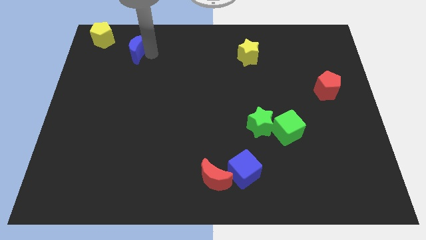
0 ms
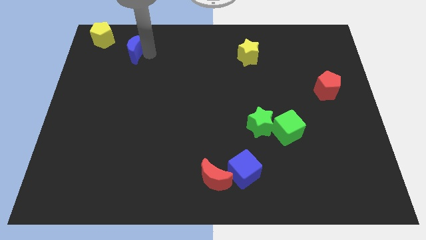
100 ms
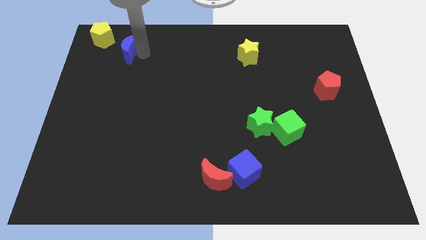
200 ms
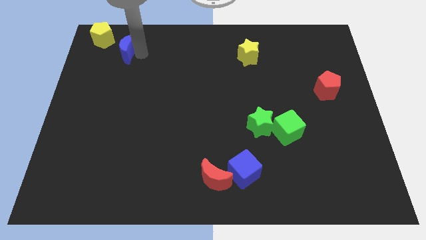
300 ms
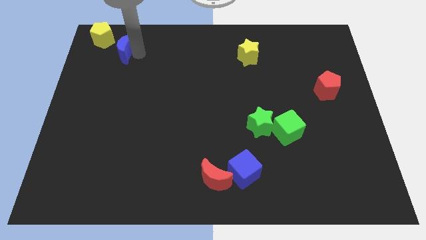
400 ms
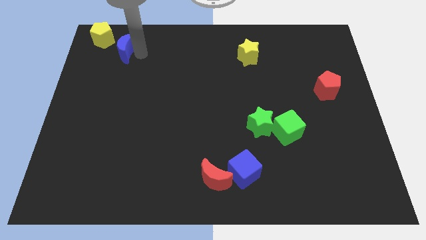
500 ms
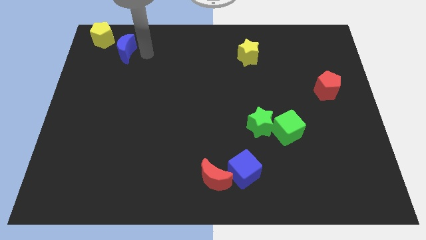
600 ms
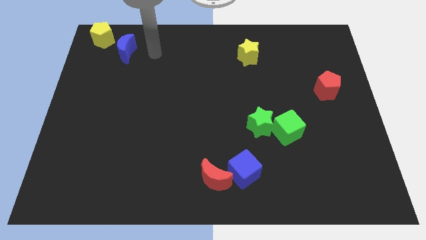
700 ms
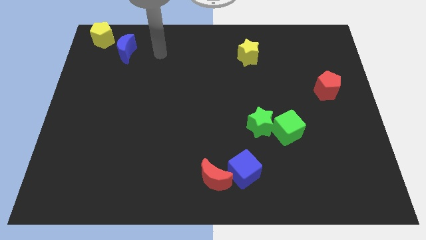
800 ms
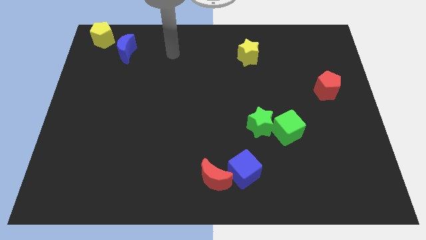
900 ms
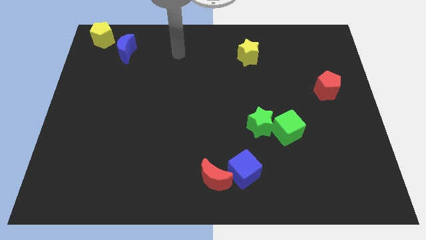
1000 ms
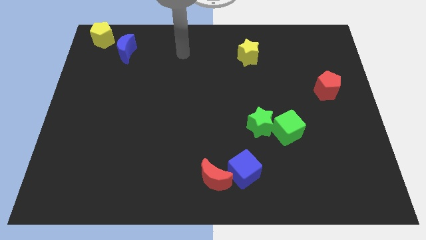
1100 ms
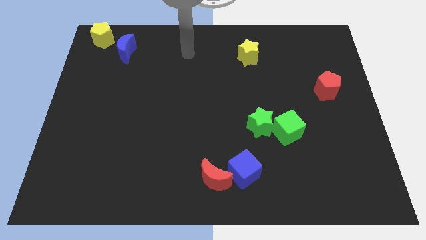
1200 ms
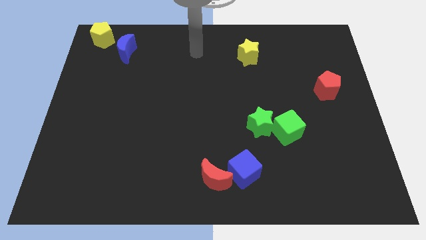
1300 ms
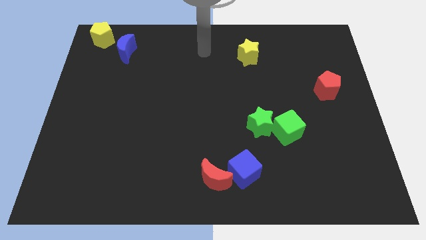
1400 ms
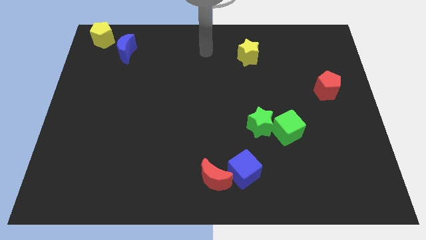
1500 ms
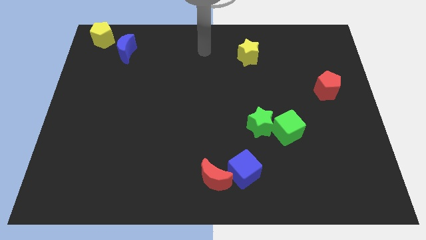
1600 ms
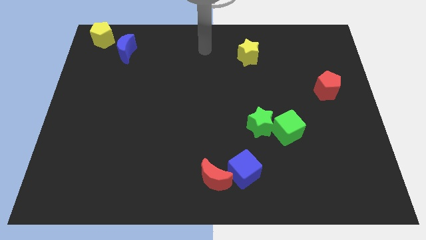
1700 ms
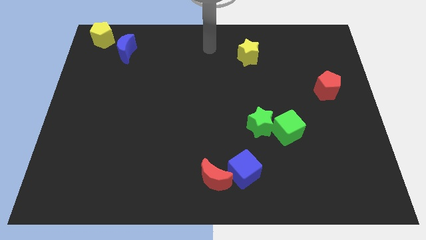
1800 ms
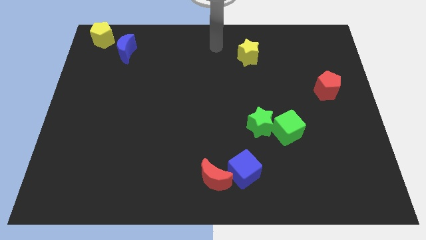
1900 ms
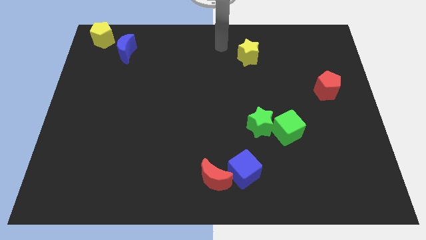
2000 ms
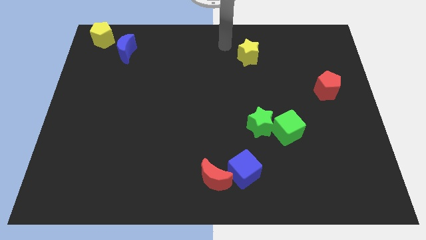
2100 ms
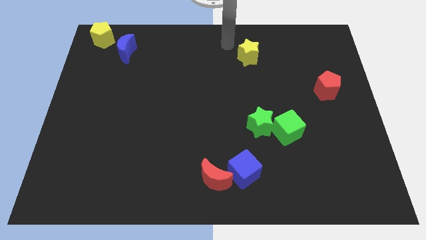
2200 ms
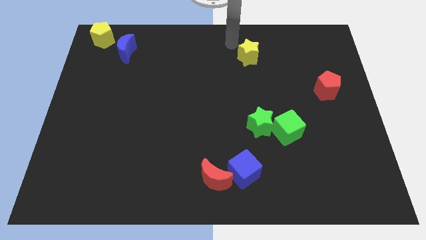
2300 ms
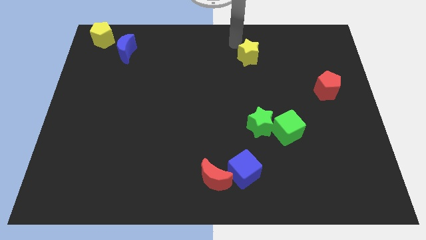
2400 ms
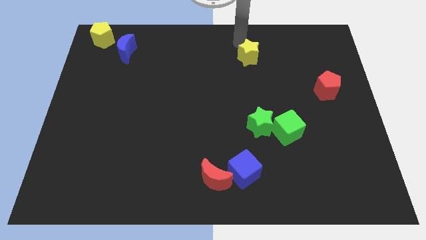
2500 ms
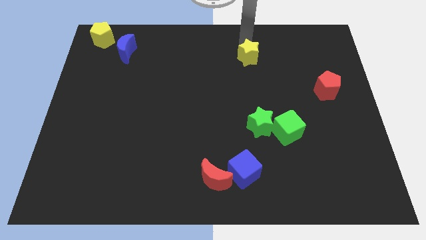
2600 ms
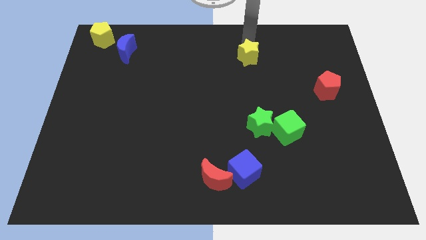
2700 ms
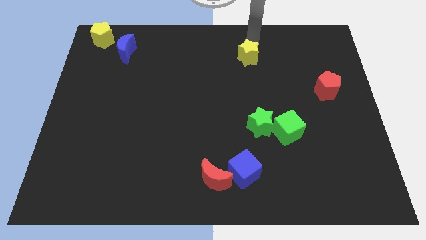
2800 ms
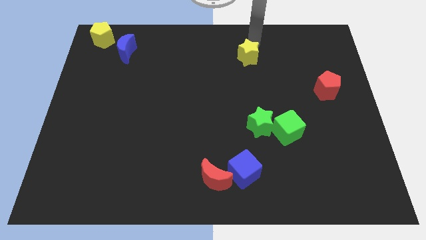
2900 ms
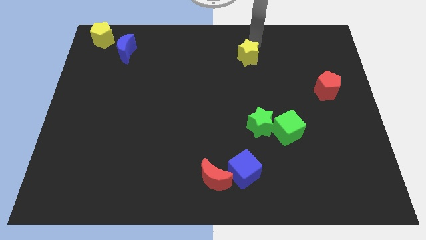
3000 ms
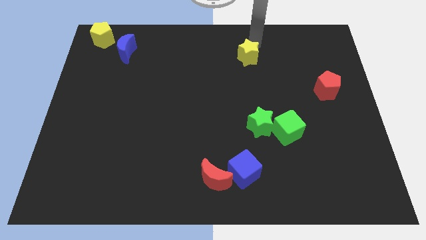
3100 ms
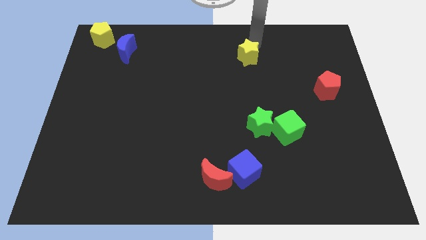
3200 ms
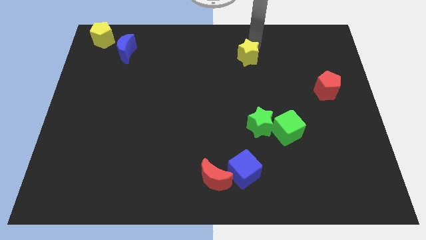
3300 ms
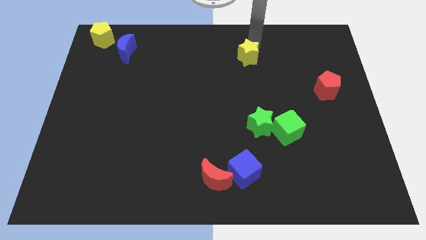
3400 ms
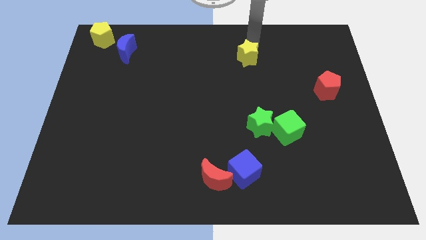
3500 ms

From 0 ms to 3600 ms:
place the arm above the yellow star

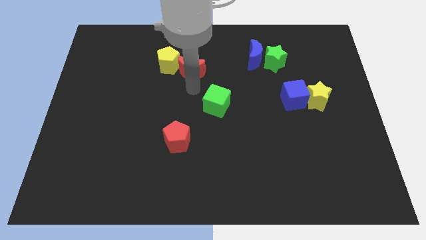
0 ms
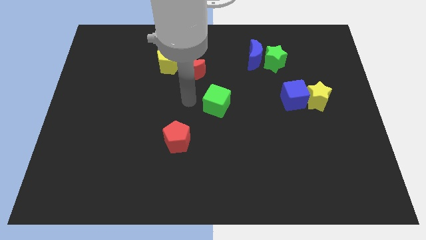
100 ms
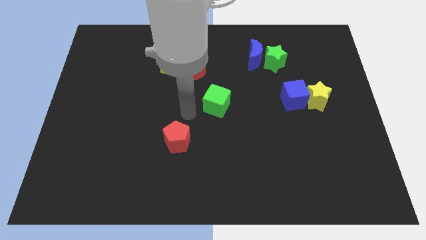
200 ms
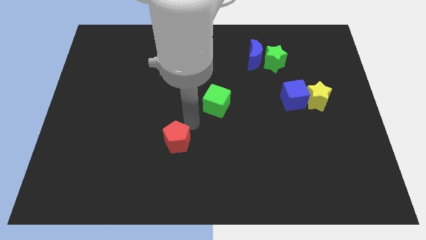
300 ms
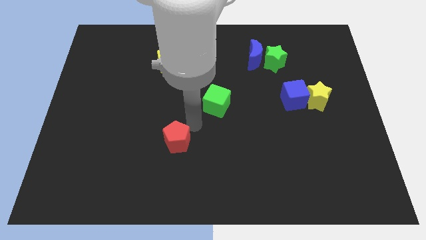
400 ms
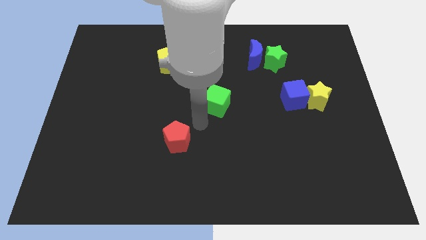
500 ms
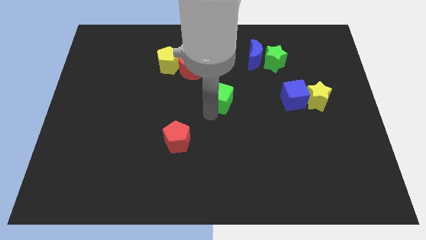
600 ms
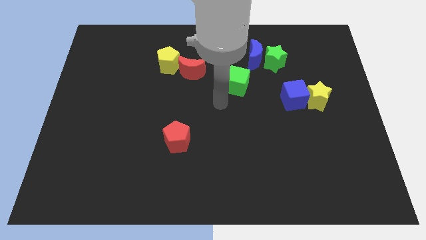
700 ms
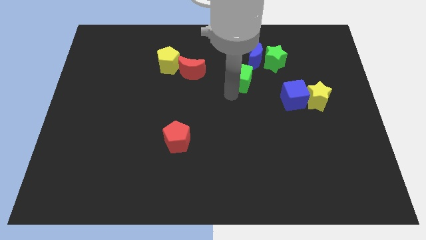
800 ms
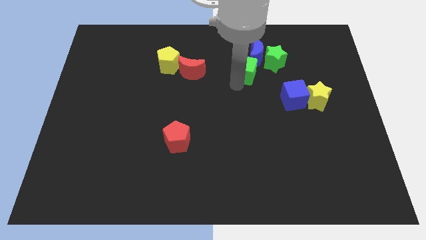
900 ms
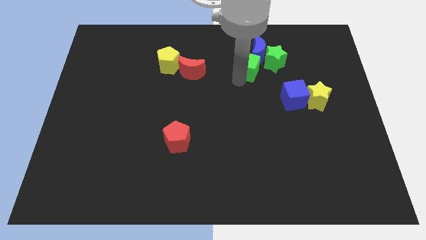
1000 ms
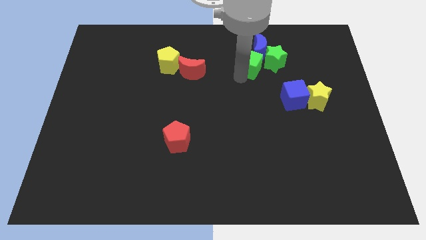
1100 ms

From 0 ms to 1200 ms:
push the green cube into the blue crescent

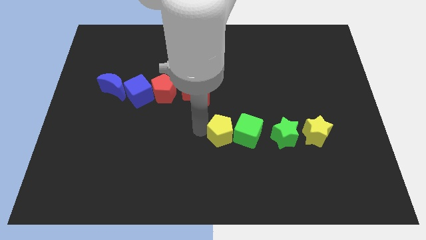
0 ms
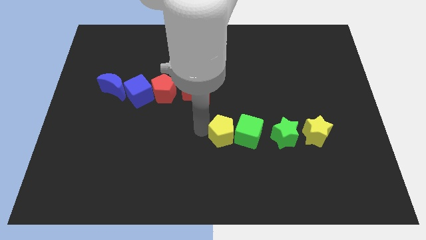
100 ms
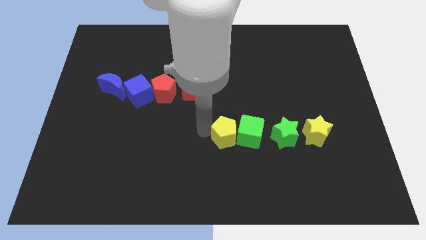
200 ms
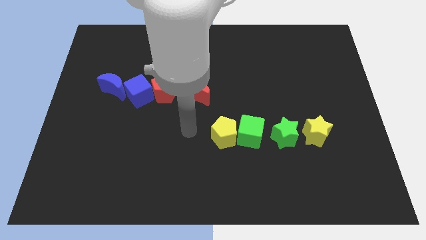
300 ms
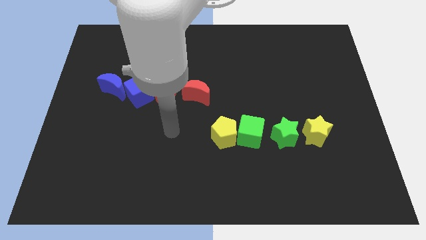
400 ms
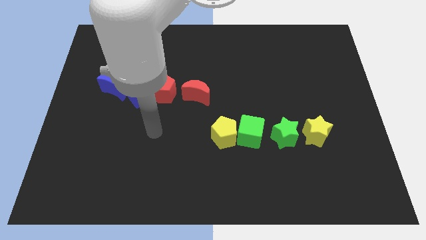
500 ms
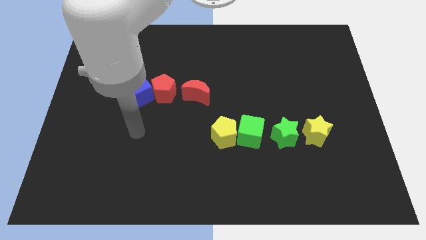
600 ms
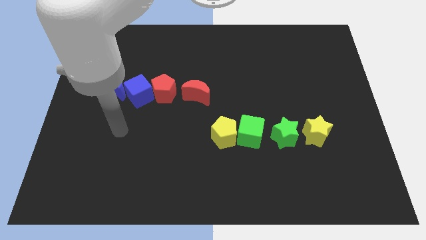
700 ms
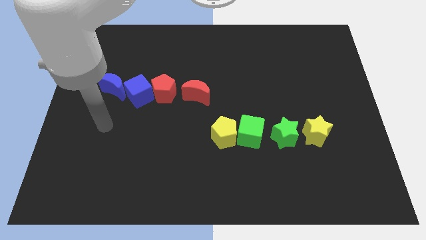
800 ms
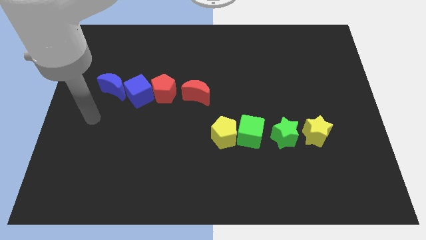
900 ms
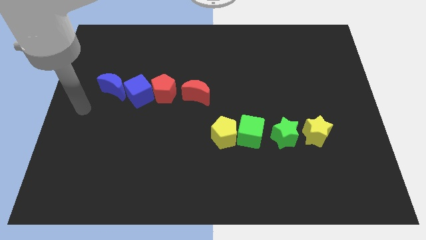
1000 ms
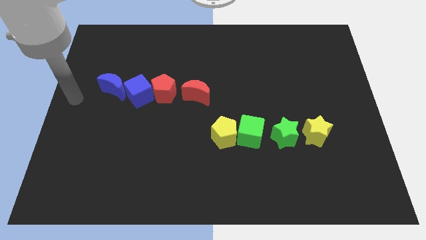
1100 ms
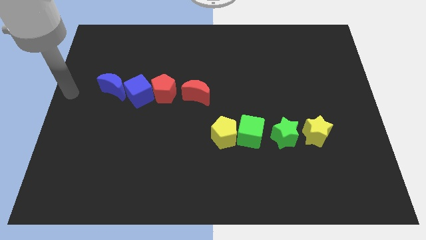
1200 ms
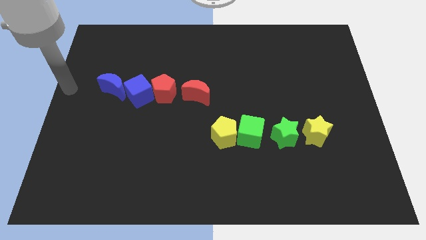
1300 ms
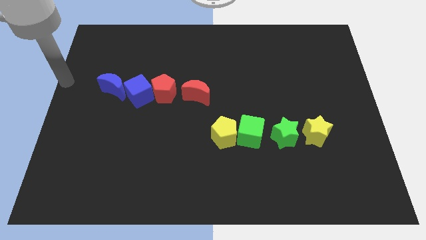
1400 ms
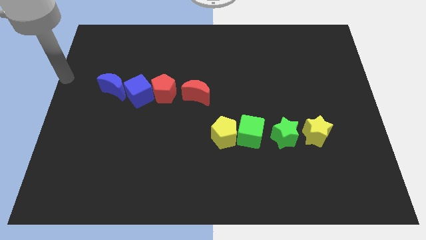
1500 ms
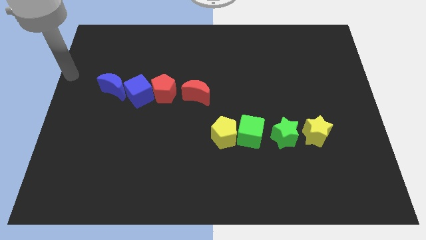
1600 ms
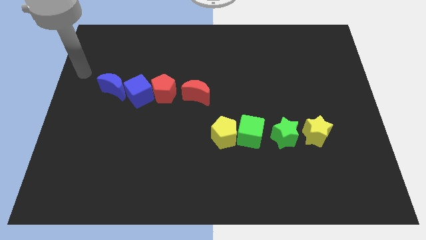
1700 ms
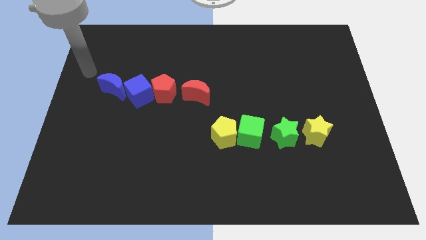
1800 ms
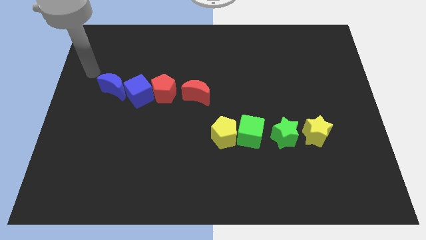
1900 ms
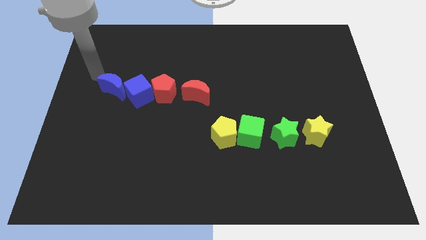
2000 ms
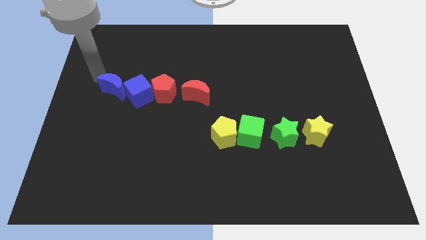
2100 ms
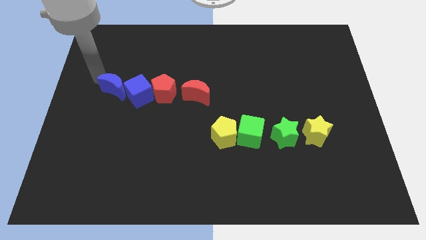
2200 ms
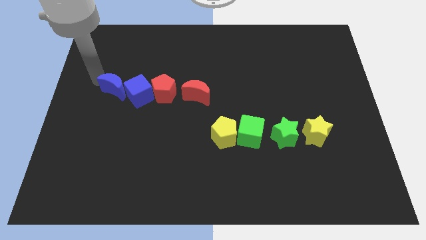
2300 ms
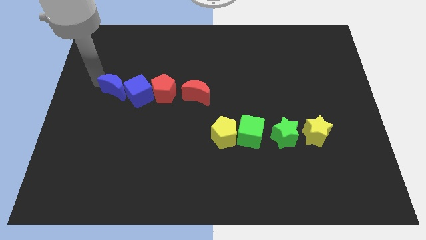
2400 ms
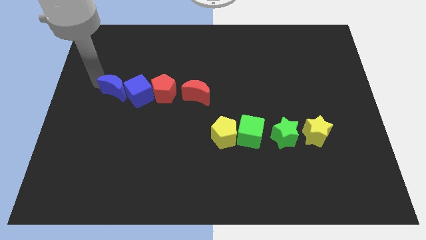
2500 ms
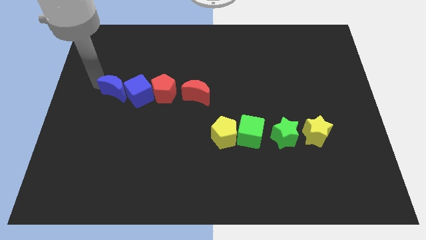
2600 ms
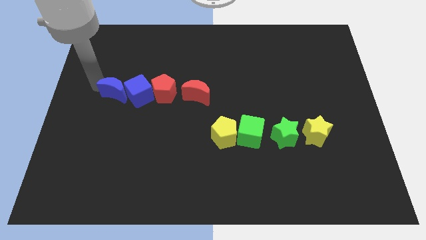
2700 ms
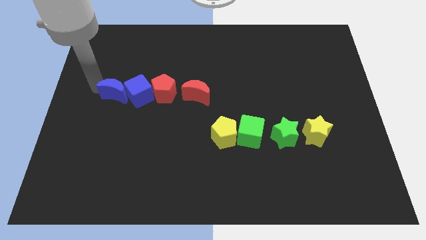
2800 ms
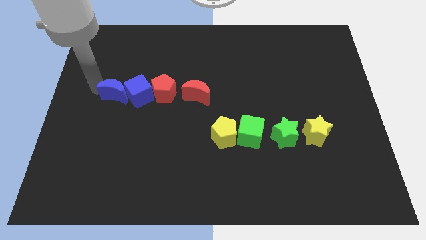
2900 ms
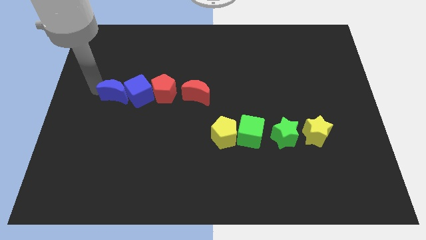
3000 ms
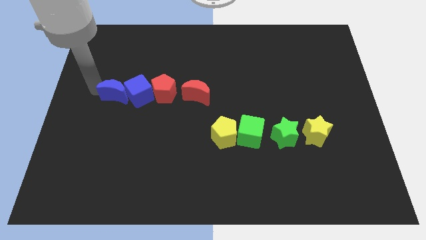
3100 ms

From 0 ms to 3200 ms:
move your arm away from the yellow pentagon

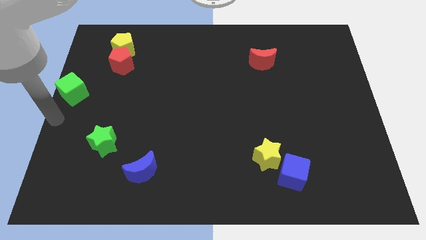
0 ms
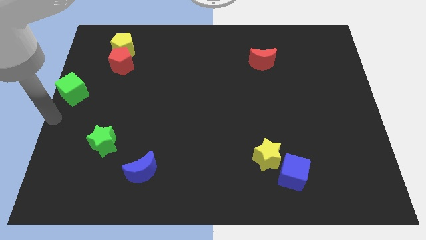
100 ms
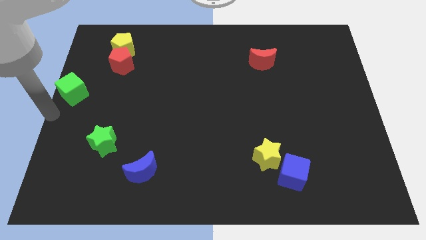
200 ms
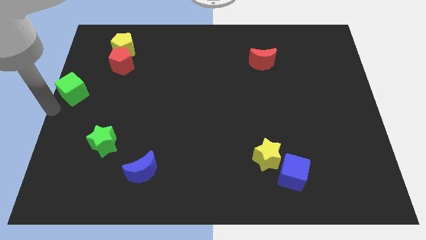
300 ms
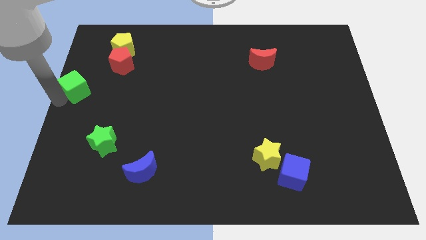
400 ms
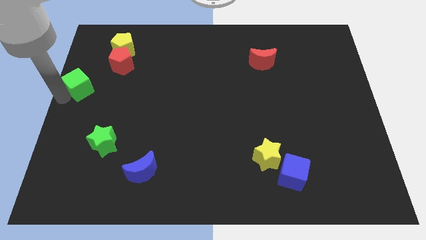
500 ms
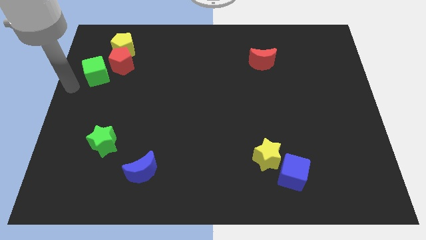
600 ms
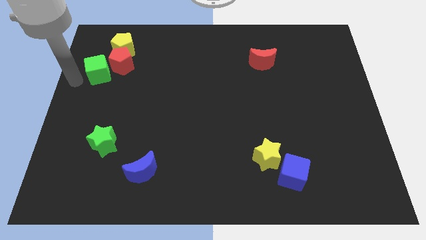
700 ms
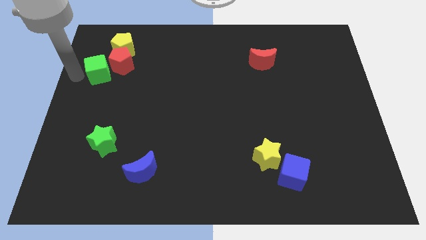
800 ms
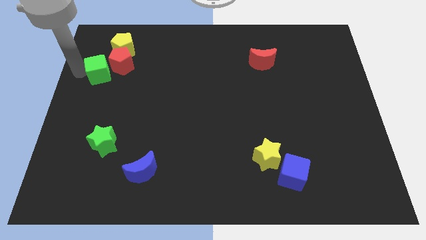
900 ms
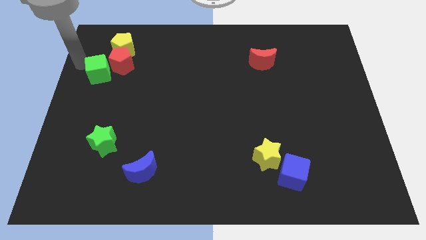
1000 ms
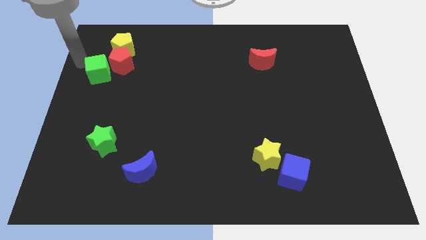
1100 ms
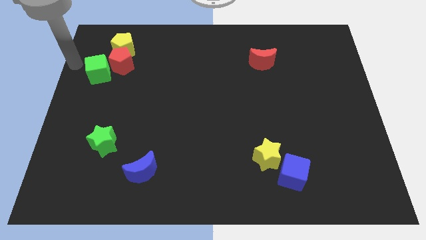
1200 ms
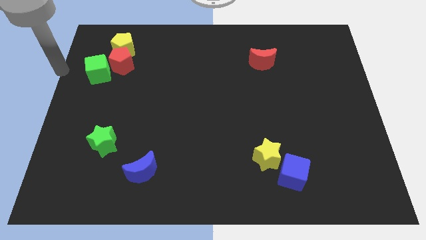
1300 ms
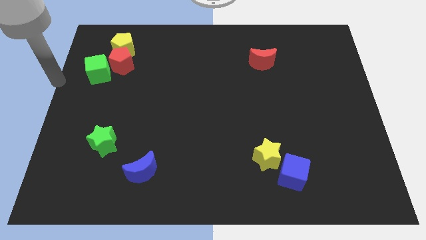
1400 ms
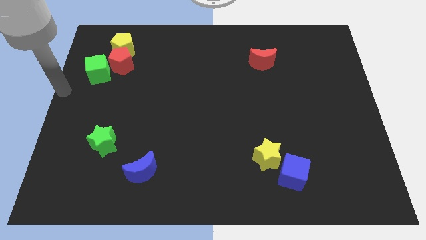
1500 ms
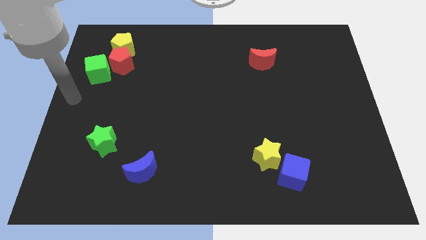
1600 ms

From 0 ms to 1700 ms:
place the green cube towards the bottom left of the red pentagon
